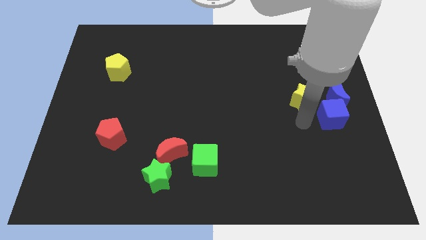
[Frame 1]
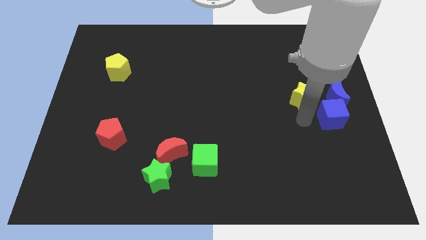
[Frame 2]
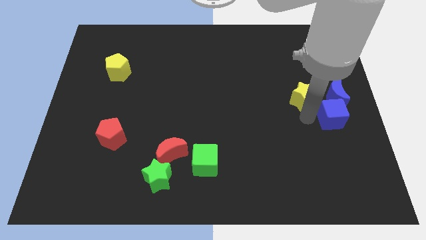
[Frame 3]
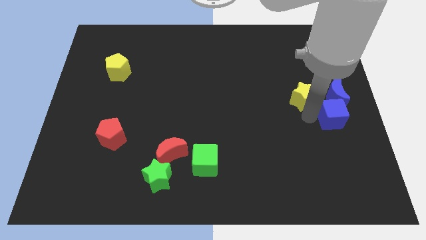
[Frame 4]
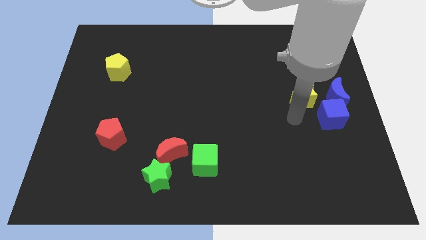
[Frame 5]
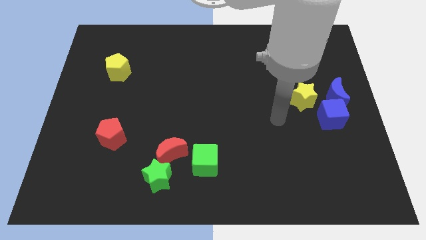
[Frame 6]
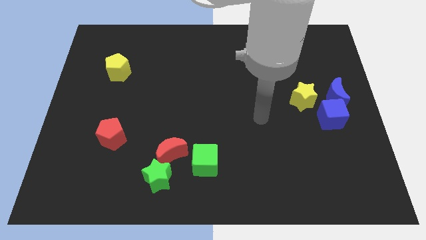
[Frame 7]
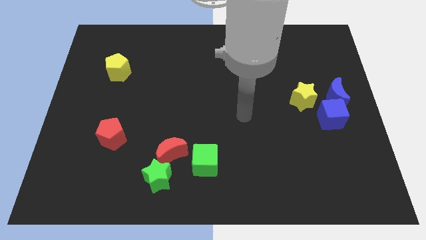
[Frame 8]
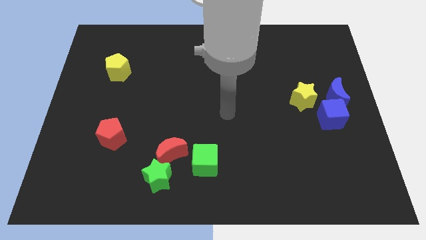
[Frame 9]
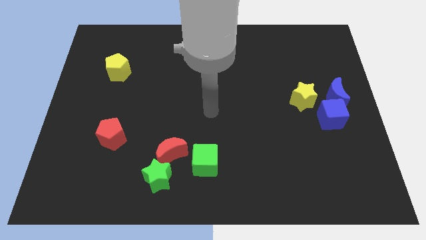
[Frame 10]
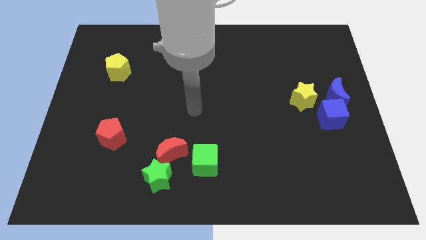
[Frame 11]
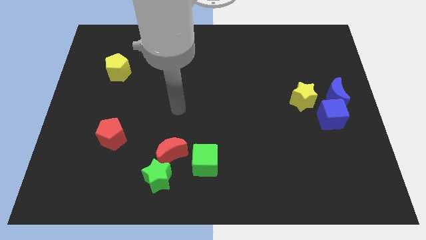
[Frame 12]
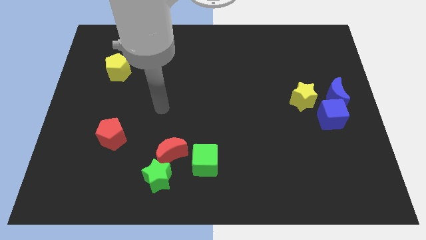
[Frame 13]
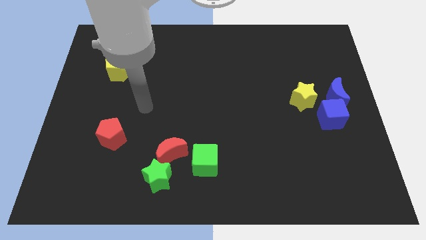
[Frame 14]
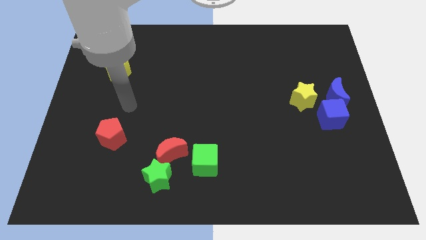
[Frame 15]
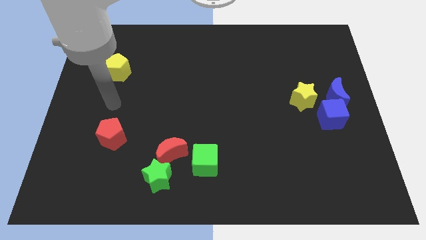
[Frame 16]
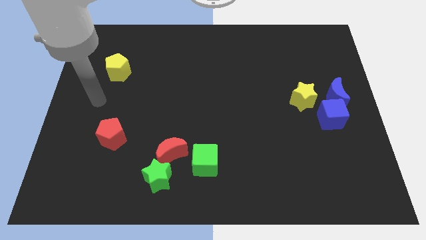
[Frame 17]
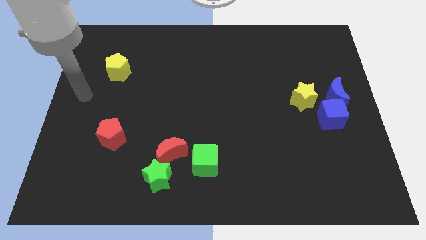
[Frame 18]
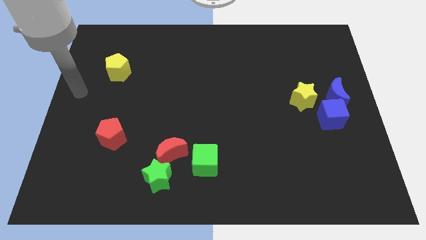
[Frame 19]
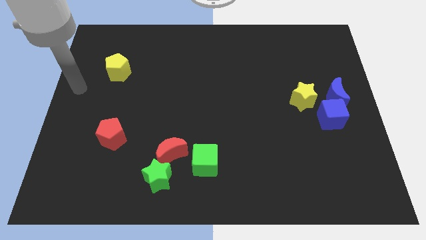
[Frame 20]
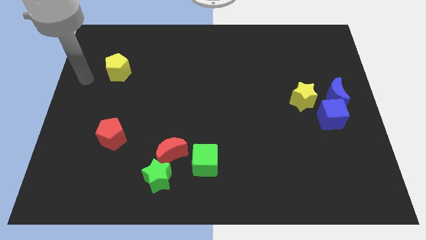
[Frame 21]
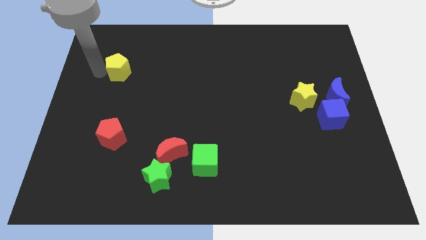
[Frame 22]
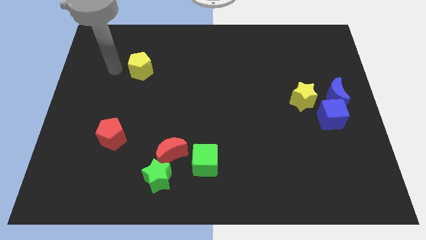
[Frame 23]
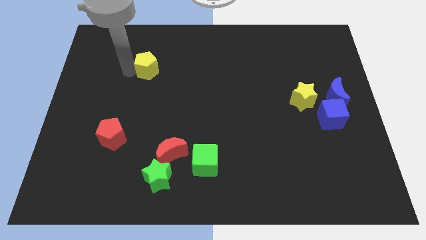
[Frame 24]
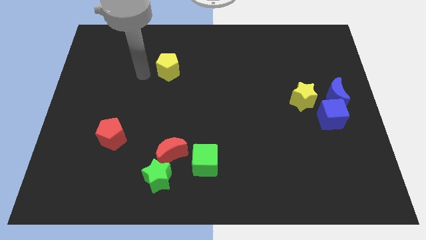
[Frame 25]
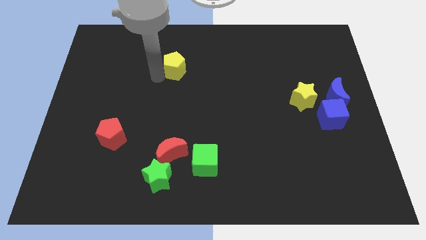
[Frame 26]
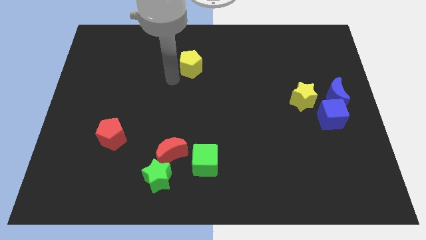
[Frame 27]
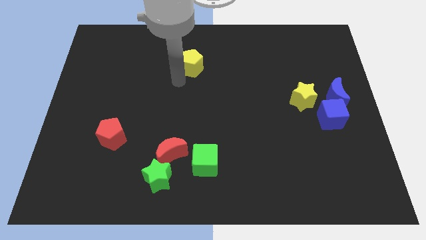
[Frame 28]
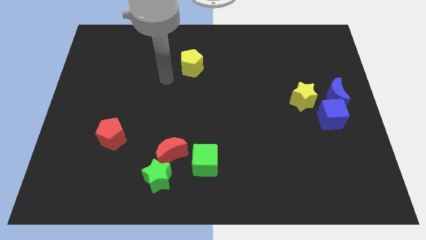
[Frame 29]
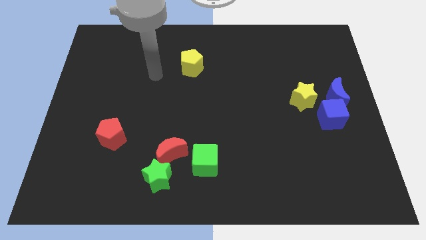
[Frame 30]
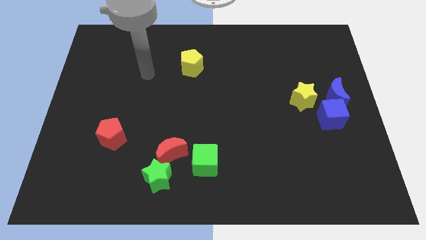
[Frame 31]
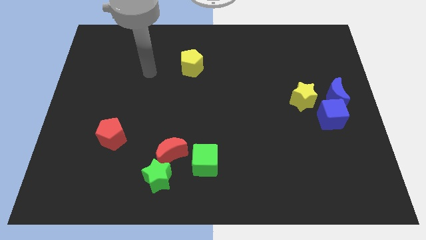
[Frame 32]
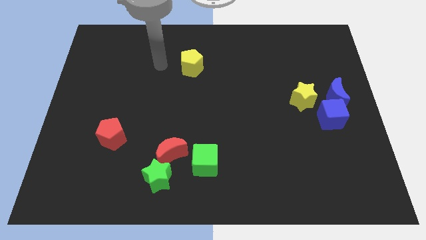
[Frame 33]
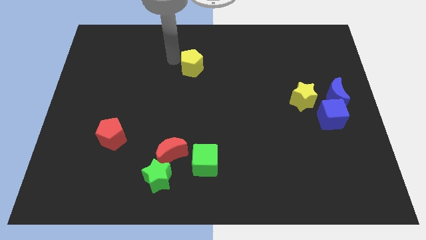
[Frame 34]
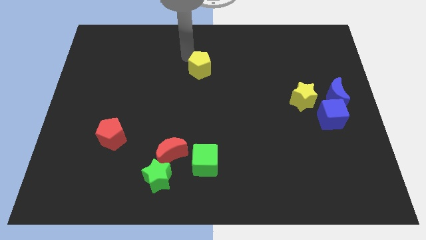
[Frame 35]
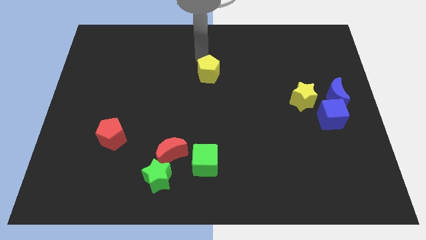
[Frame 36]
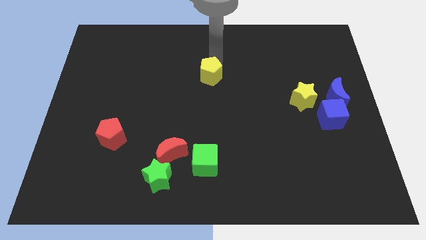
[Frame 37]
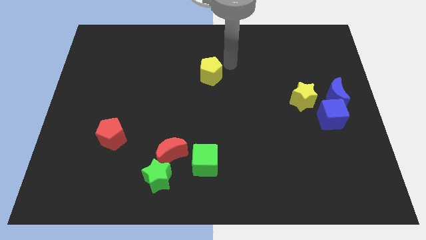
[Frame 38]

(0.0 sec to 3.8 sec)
push the yellow pentagon to the top center of the board

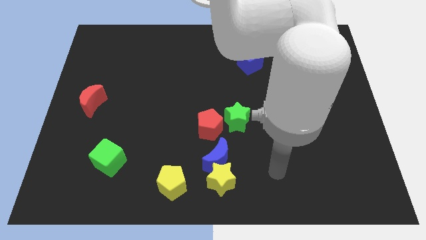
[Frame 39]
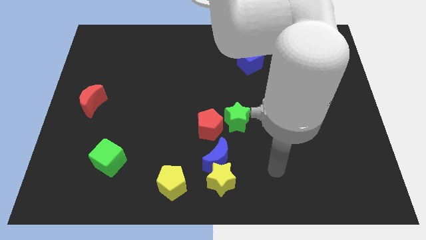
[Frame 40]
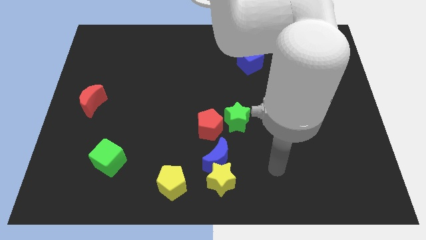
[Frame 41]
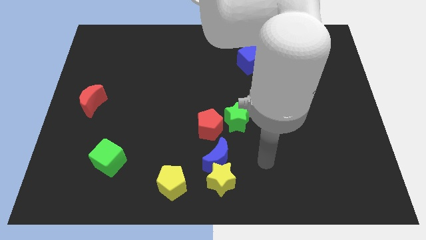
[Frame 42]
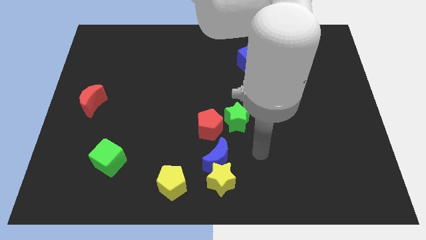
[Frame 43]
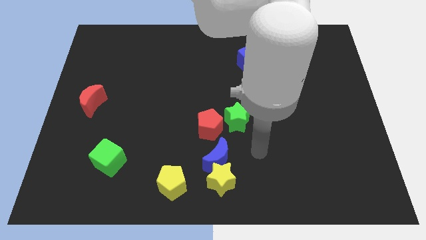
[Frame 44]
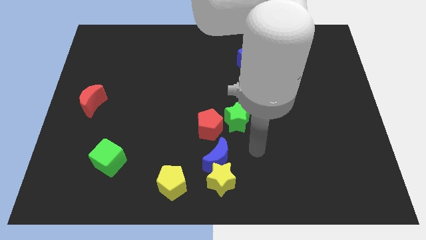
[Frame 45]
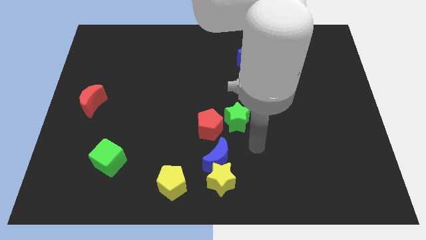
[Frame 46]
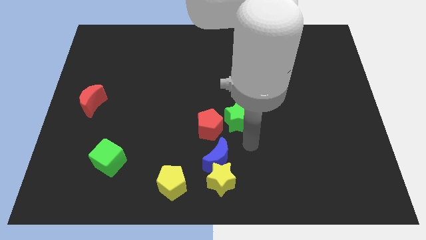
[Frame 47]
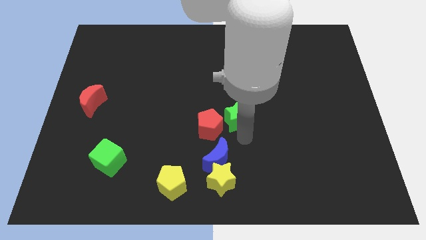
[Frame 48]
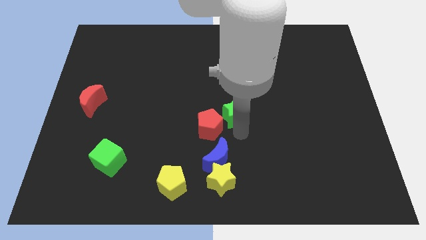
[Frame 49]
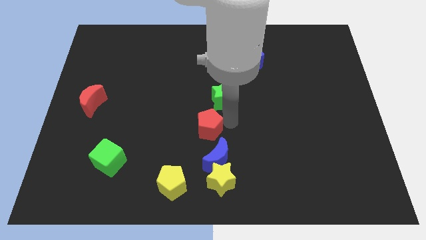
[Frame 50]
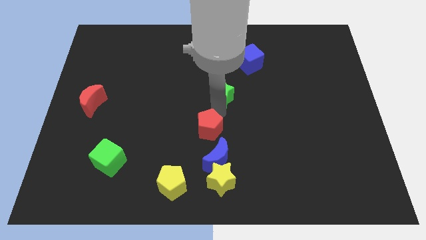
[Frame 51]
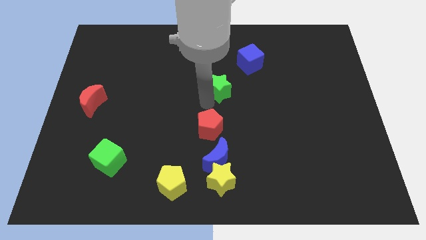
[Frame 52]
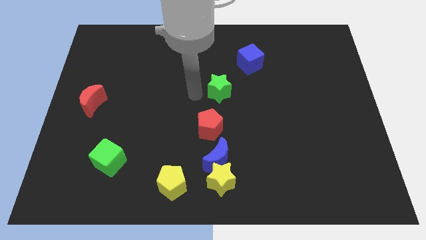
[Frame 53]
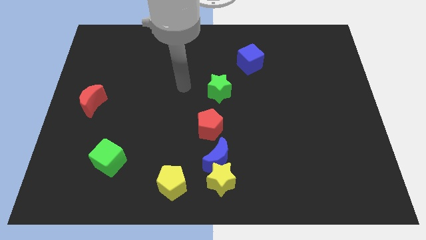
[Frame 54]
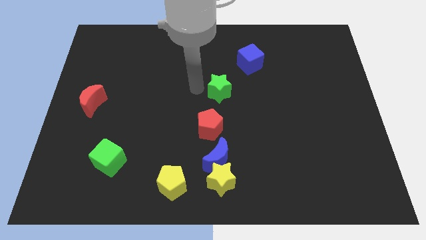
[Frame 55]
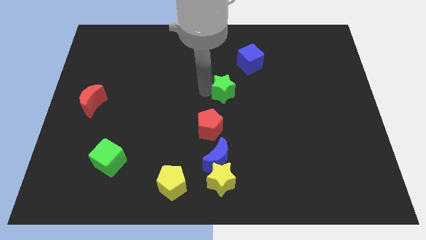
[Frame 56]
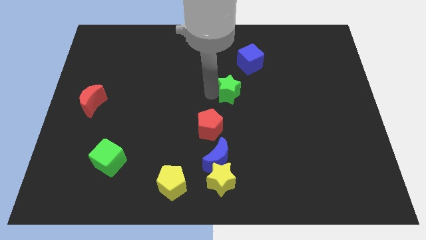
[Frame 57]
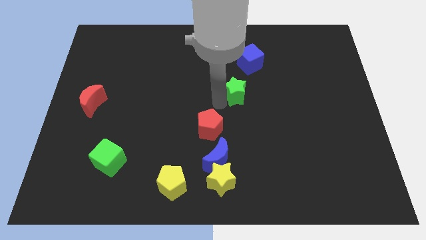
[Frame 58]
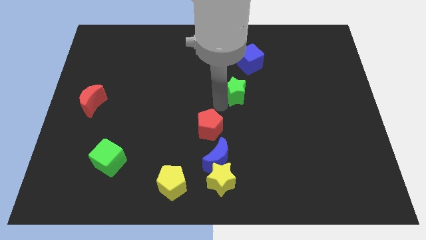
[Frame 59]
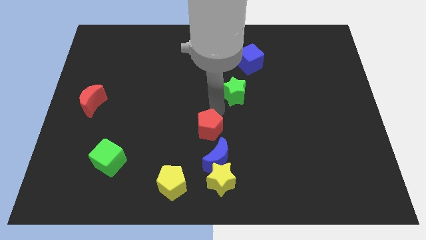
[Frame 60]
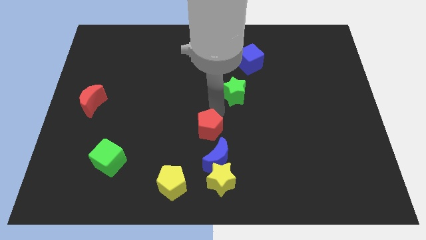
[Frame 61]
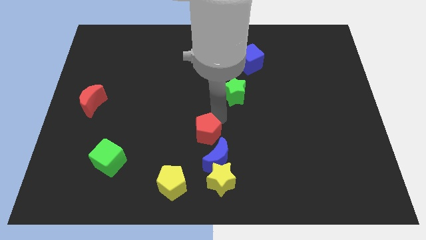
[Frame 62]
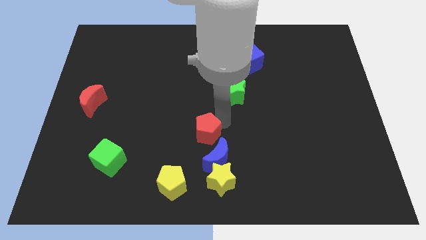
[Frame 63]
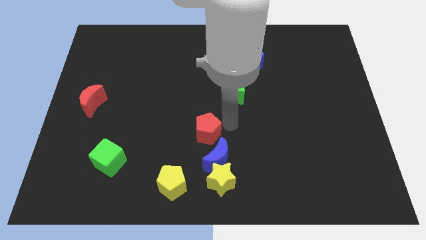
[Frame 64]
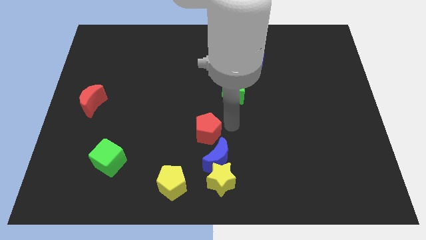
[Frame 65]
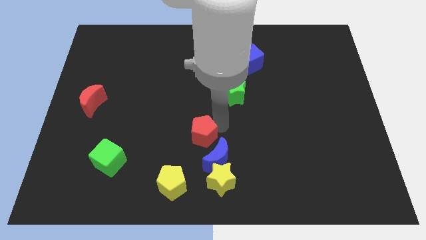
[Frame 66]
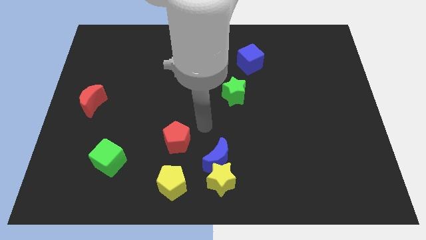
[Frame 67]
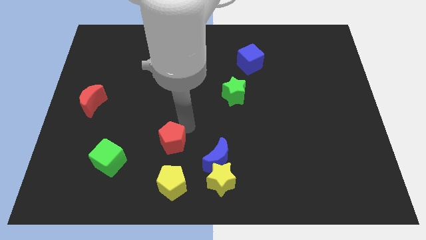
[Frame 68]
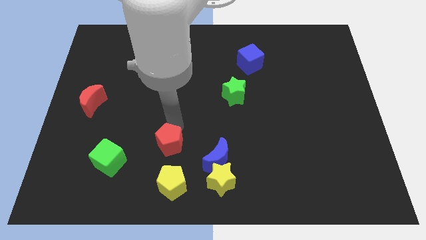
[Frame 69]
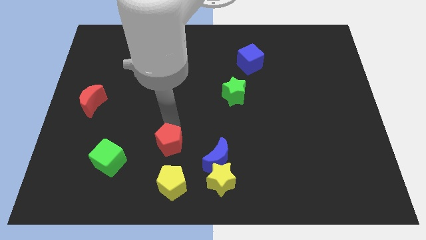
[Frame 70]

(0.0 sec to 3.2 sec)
place red pentagon above the yellow pentagon

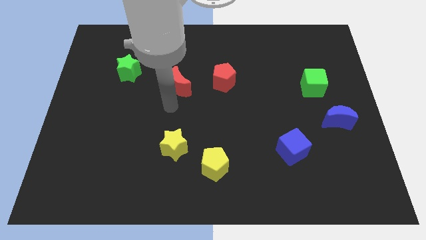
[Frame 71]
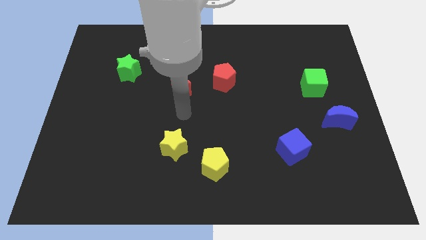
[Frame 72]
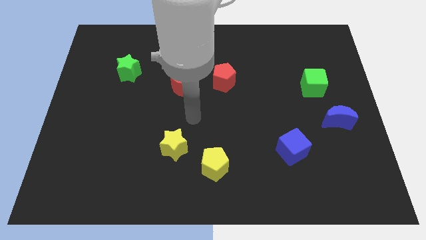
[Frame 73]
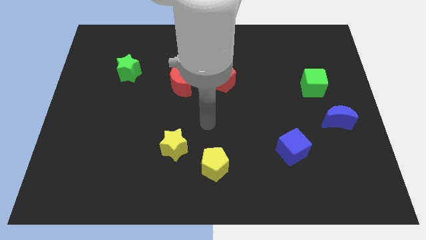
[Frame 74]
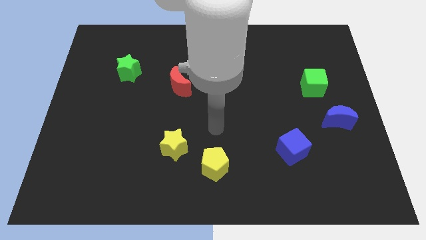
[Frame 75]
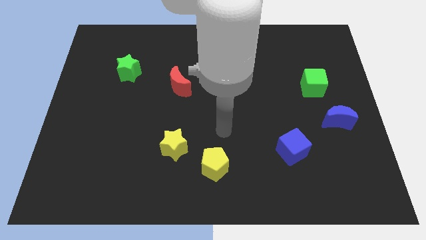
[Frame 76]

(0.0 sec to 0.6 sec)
point your hand above the yellow pentagon
